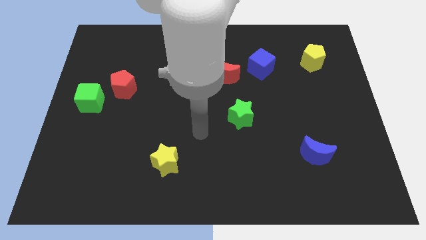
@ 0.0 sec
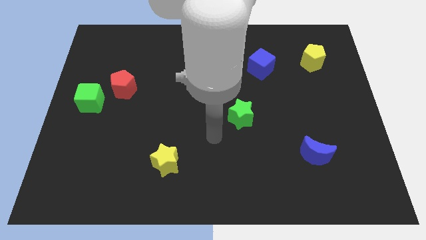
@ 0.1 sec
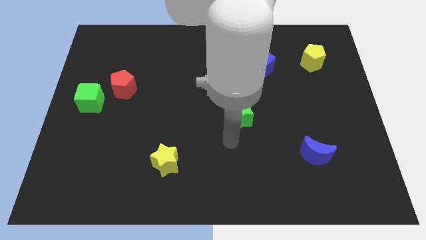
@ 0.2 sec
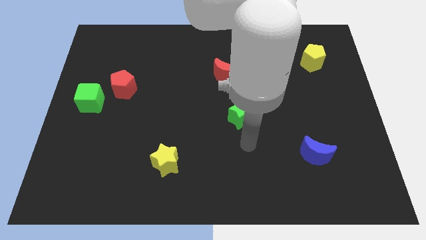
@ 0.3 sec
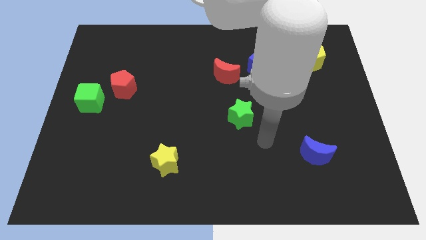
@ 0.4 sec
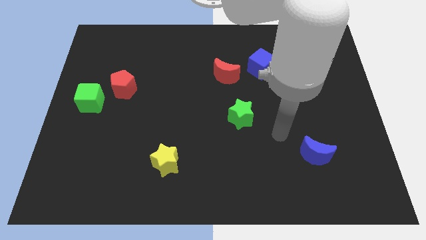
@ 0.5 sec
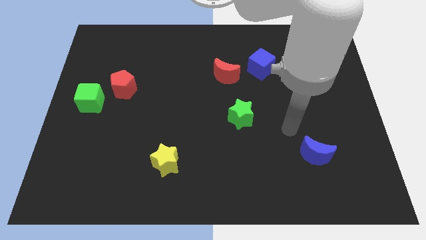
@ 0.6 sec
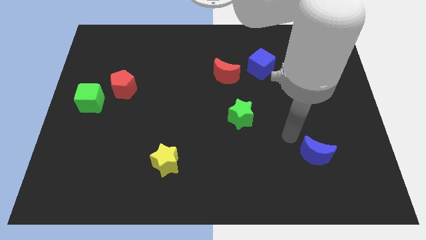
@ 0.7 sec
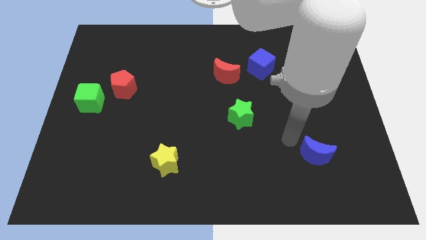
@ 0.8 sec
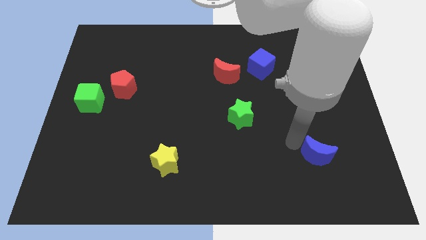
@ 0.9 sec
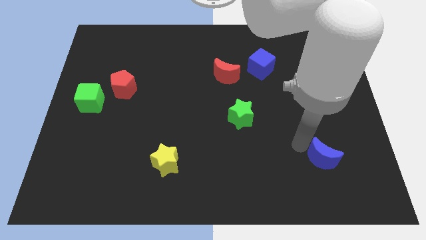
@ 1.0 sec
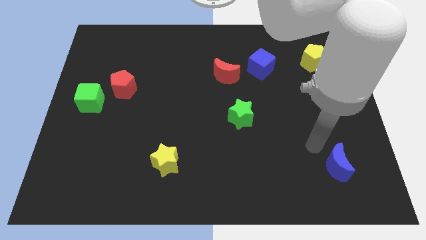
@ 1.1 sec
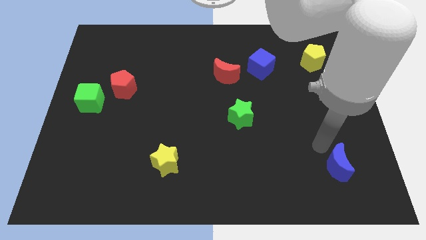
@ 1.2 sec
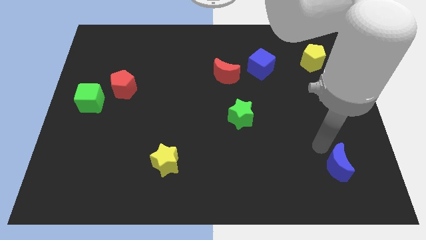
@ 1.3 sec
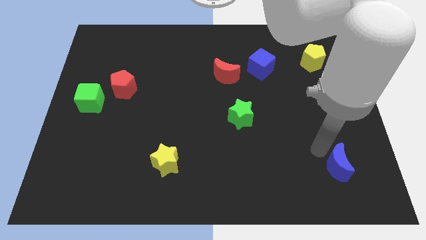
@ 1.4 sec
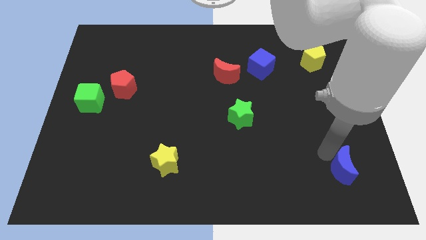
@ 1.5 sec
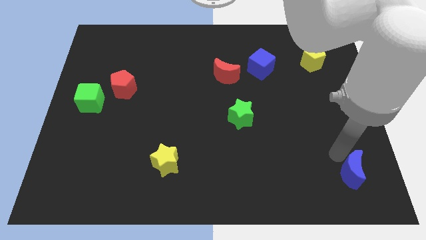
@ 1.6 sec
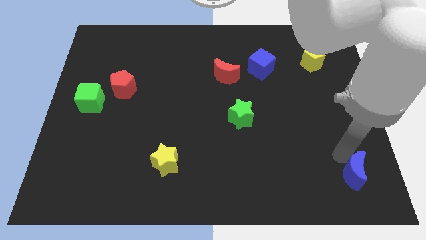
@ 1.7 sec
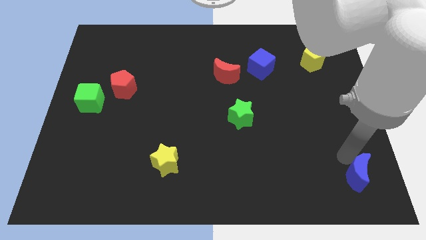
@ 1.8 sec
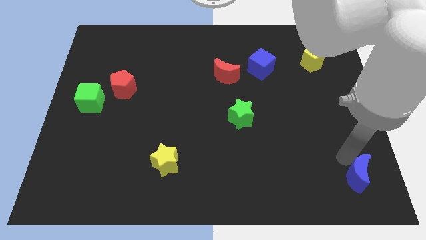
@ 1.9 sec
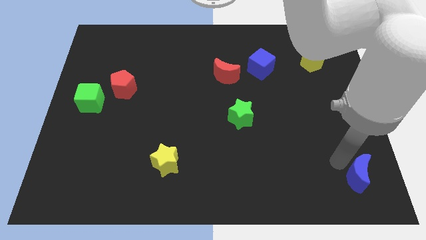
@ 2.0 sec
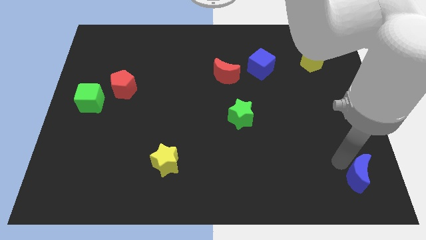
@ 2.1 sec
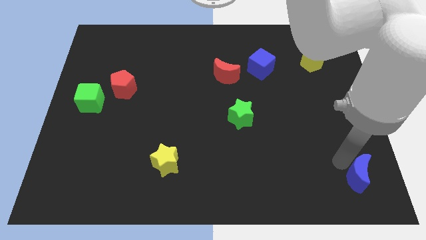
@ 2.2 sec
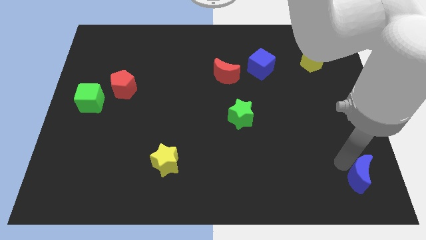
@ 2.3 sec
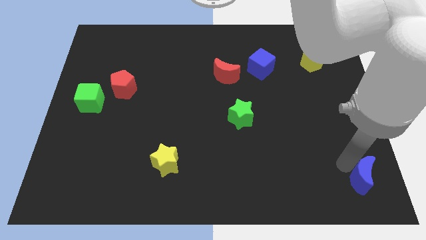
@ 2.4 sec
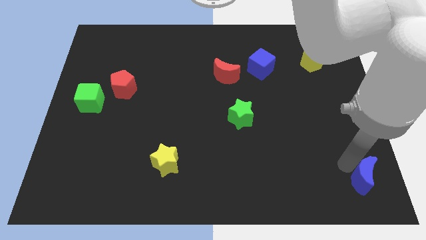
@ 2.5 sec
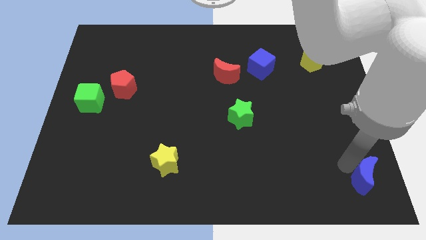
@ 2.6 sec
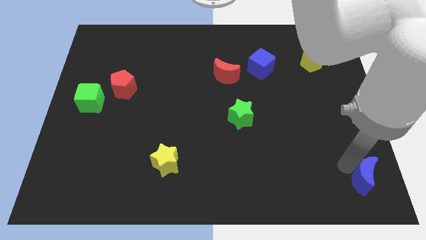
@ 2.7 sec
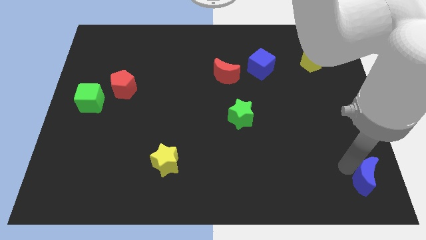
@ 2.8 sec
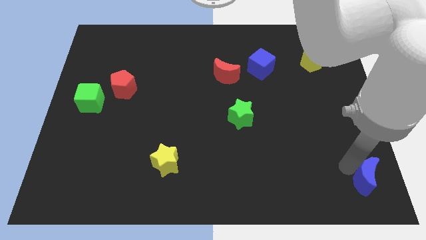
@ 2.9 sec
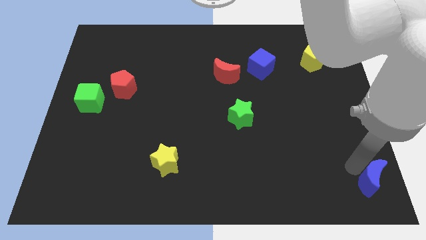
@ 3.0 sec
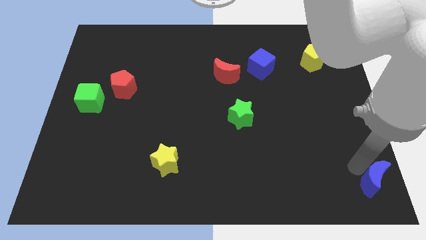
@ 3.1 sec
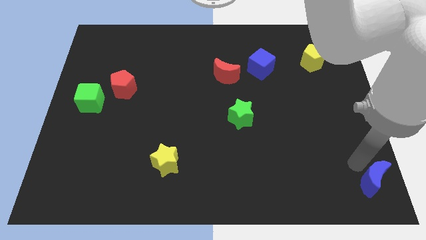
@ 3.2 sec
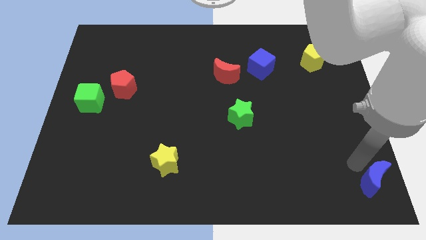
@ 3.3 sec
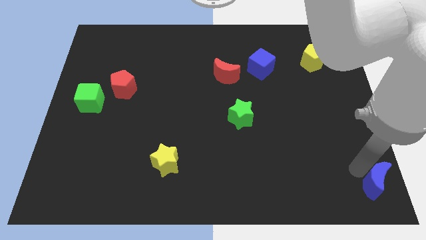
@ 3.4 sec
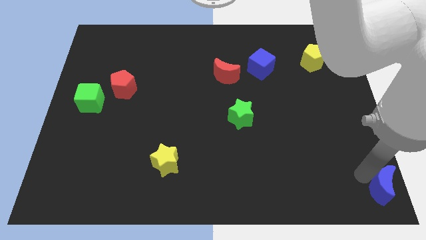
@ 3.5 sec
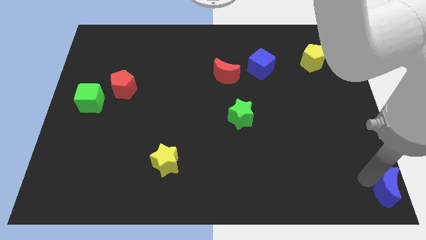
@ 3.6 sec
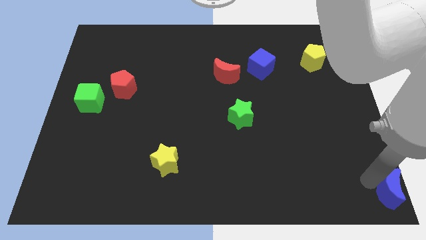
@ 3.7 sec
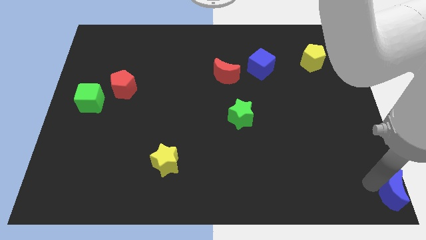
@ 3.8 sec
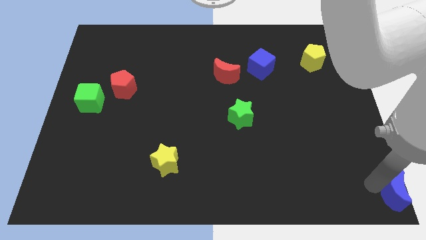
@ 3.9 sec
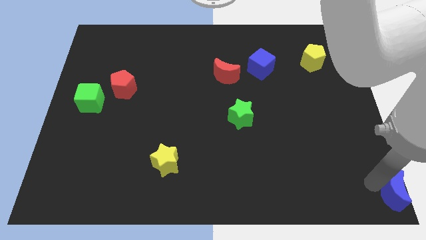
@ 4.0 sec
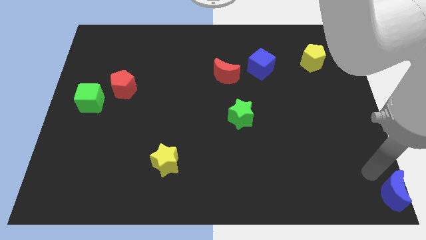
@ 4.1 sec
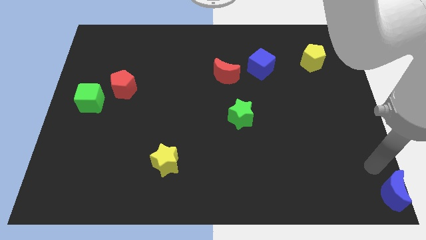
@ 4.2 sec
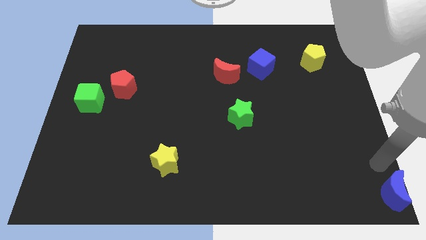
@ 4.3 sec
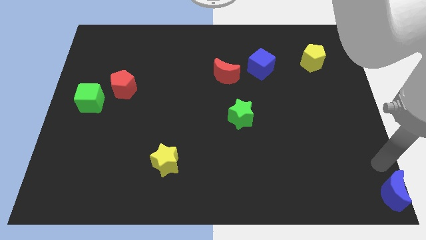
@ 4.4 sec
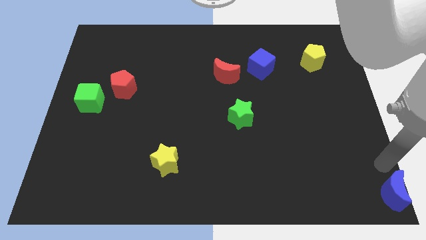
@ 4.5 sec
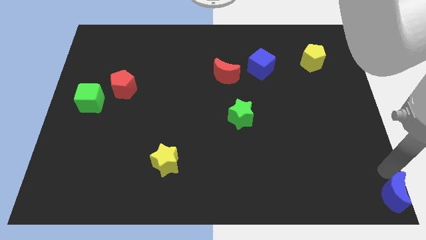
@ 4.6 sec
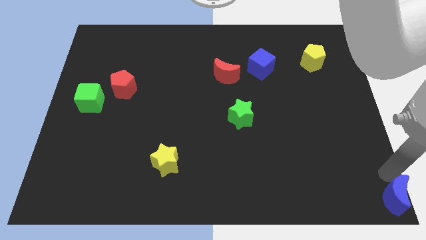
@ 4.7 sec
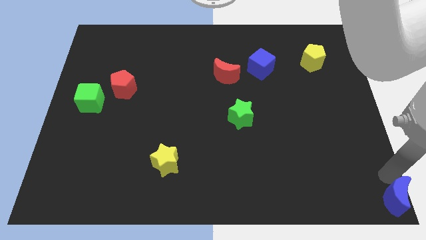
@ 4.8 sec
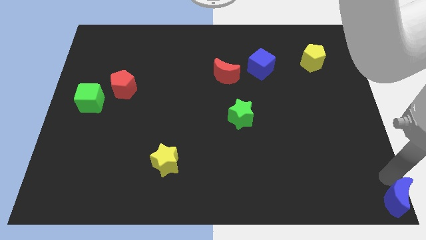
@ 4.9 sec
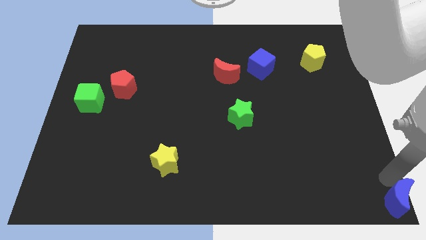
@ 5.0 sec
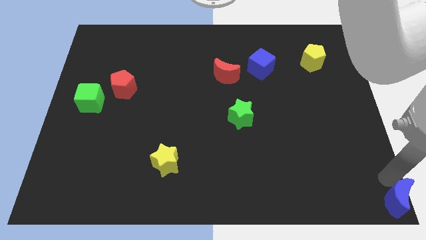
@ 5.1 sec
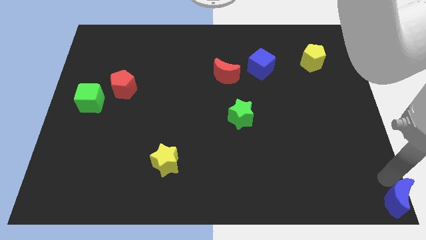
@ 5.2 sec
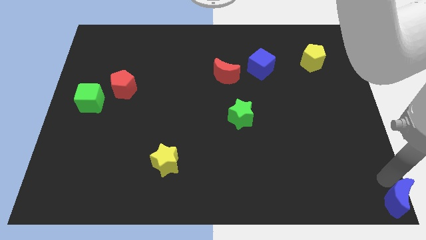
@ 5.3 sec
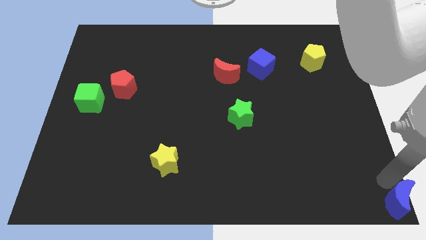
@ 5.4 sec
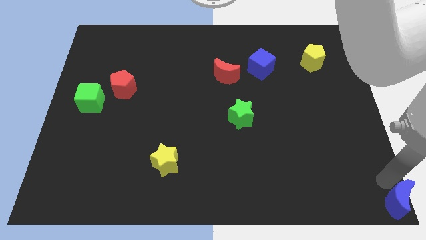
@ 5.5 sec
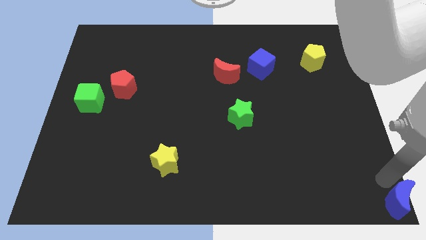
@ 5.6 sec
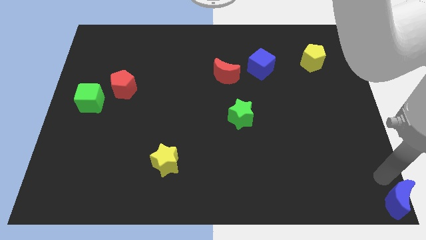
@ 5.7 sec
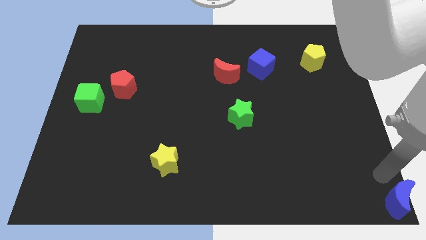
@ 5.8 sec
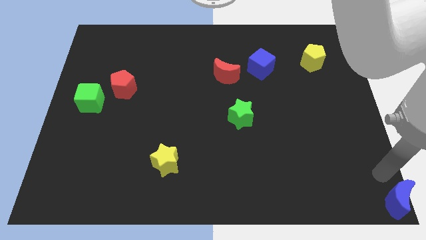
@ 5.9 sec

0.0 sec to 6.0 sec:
push the blue moon to the bottom right corner of the board

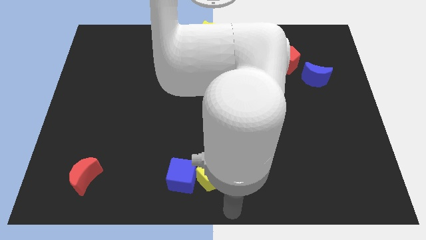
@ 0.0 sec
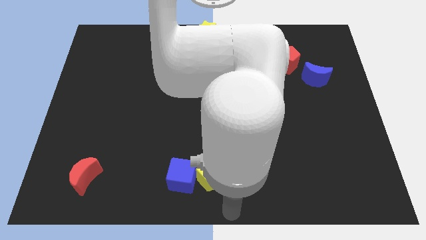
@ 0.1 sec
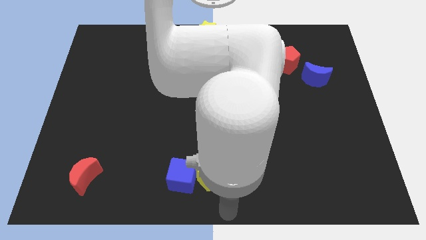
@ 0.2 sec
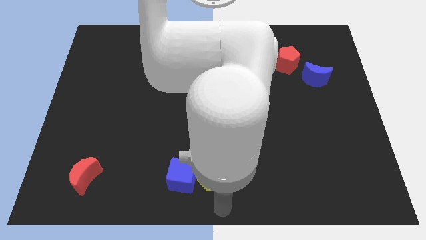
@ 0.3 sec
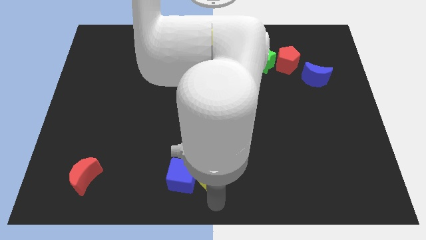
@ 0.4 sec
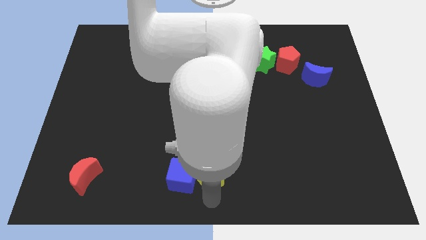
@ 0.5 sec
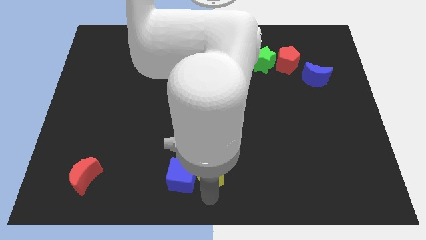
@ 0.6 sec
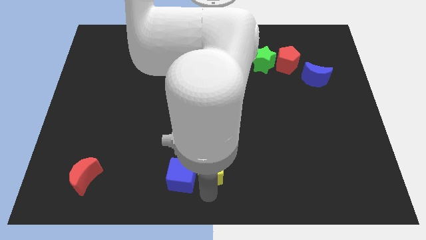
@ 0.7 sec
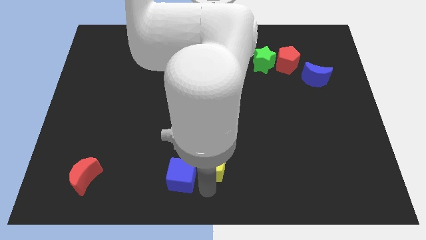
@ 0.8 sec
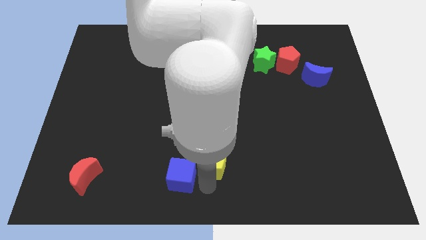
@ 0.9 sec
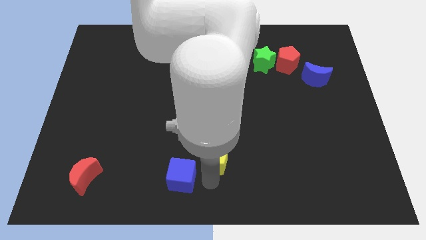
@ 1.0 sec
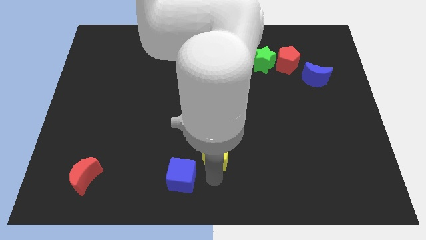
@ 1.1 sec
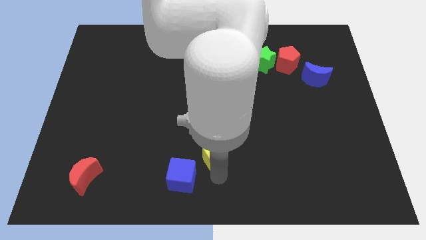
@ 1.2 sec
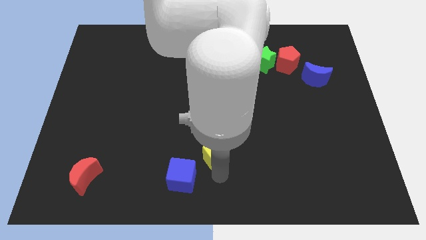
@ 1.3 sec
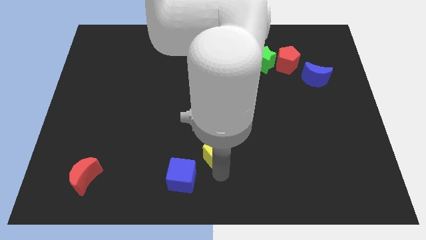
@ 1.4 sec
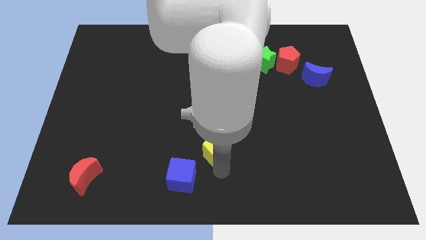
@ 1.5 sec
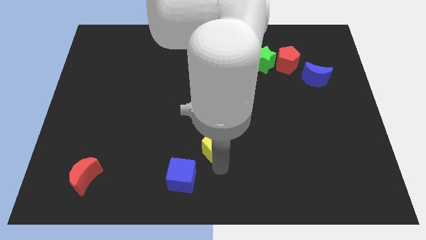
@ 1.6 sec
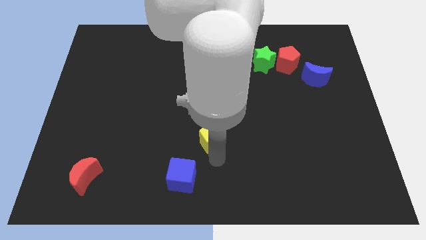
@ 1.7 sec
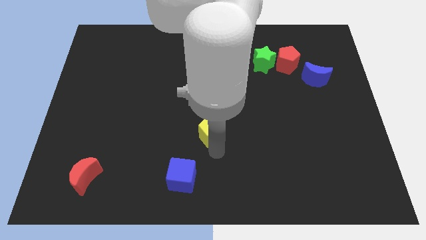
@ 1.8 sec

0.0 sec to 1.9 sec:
move the yellow pentagon to the top of the board

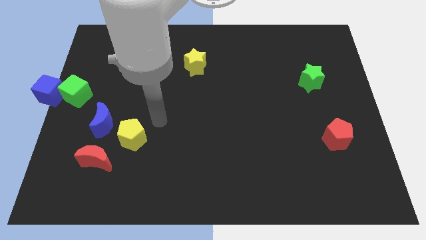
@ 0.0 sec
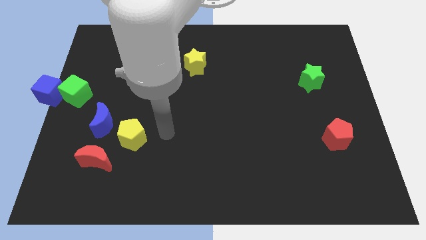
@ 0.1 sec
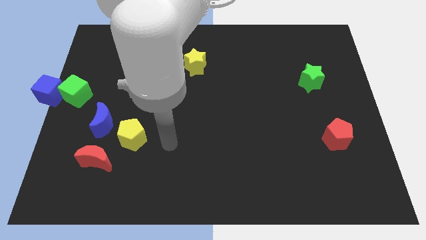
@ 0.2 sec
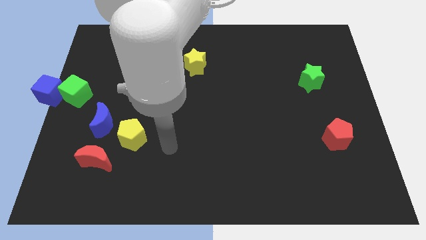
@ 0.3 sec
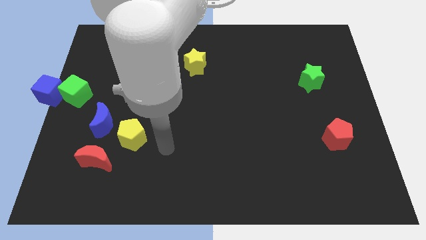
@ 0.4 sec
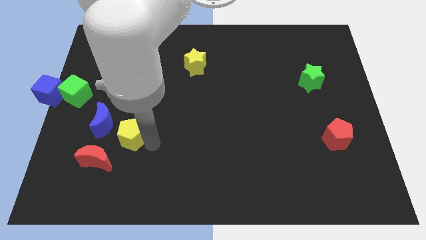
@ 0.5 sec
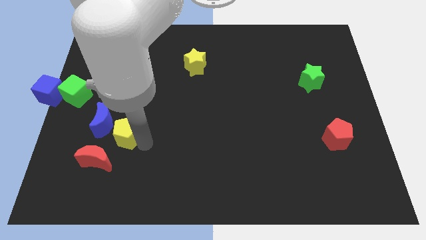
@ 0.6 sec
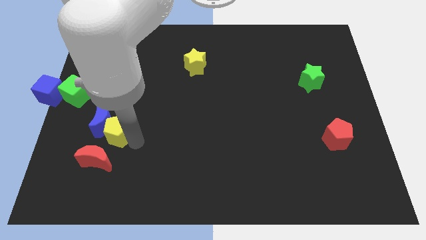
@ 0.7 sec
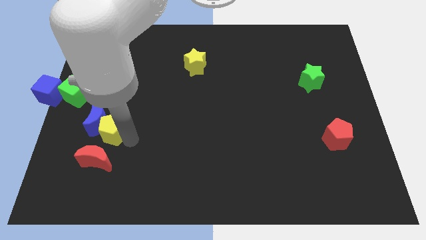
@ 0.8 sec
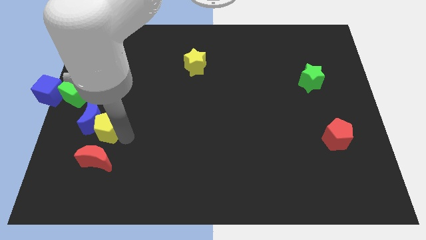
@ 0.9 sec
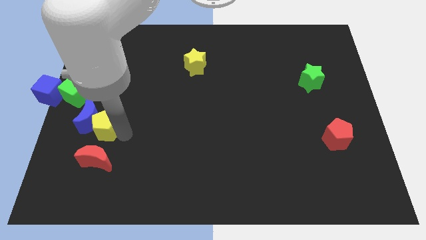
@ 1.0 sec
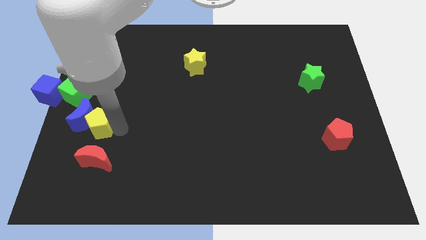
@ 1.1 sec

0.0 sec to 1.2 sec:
push the blue moon with a yellow block
